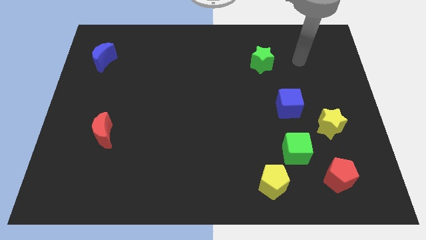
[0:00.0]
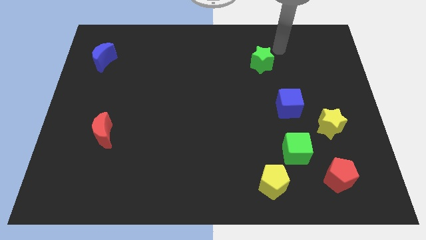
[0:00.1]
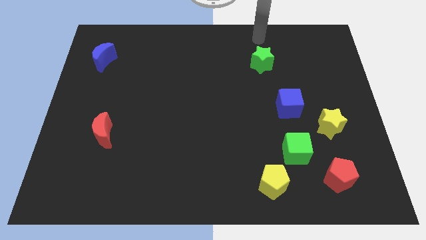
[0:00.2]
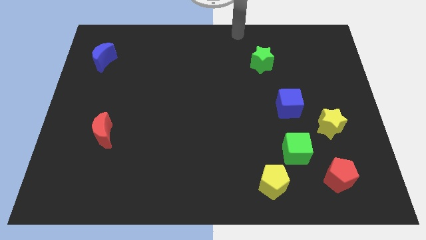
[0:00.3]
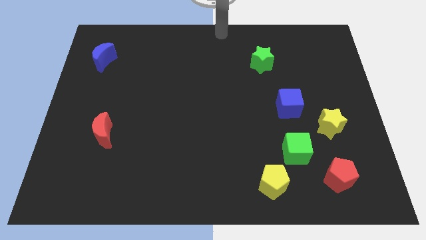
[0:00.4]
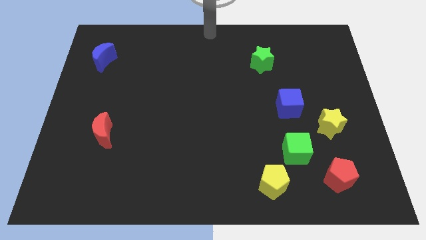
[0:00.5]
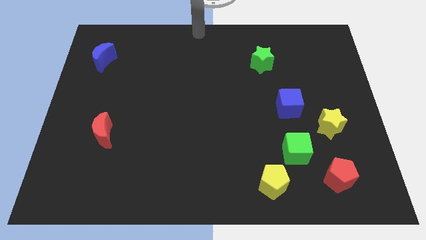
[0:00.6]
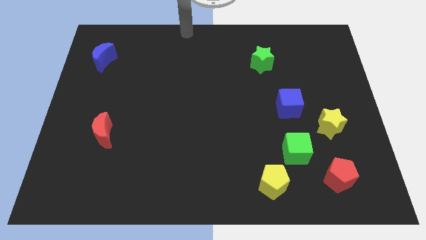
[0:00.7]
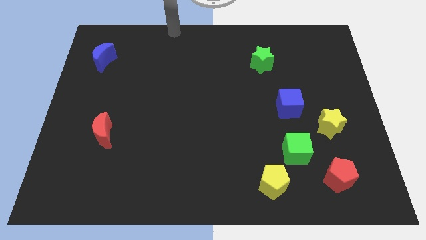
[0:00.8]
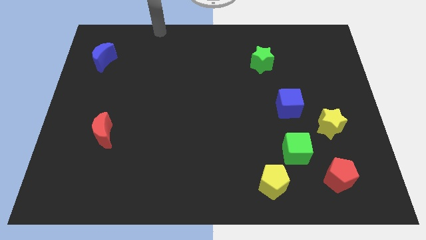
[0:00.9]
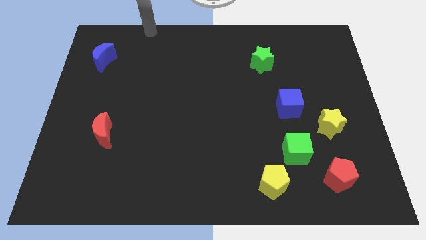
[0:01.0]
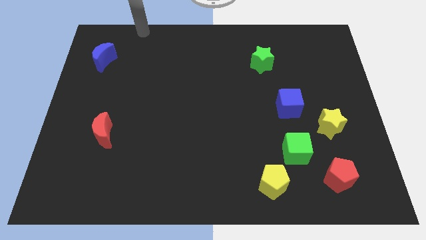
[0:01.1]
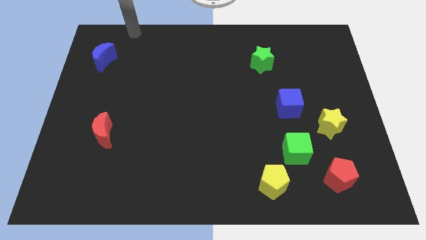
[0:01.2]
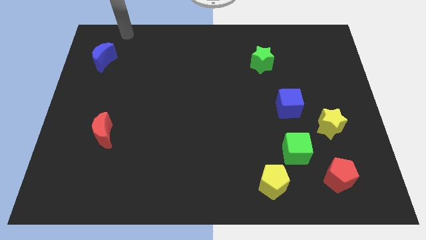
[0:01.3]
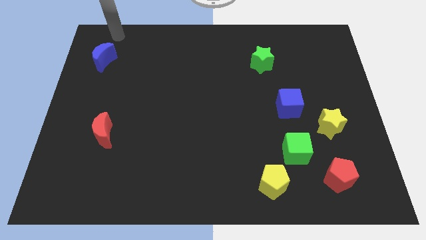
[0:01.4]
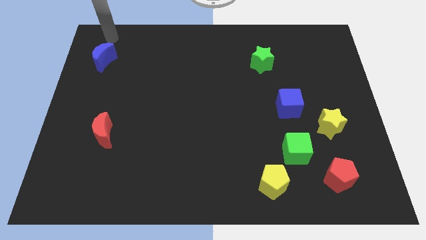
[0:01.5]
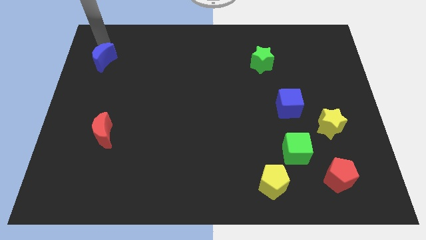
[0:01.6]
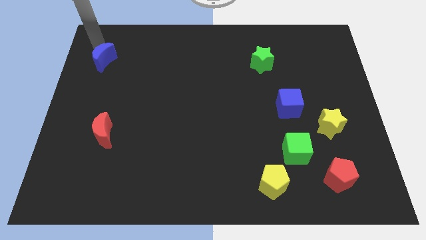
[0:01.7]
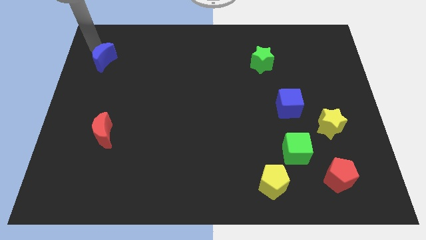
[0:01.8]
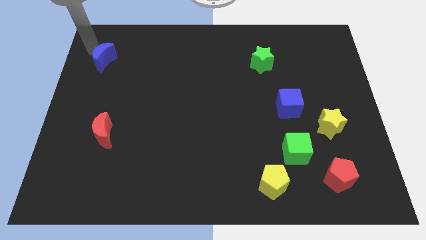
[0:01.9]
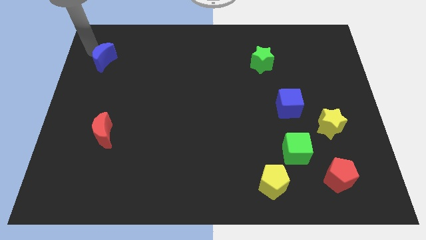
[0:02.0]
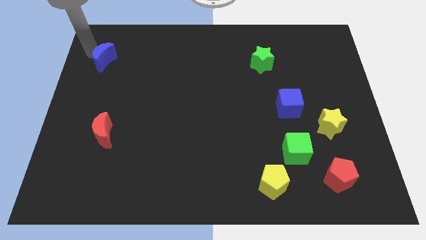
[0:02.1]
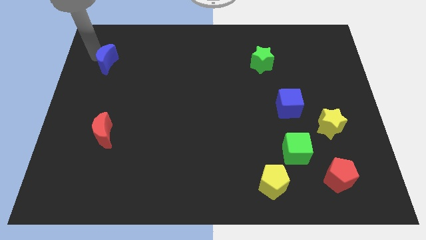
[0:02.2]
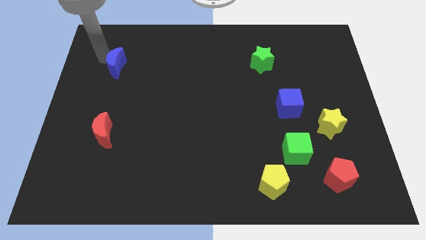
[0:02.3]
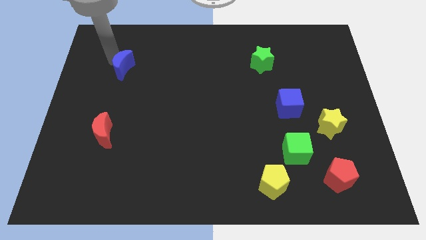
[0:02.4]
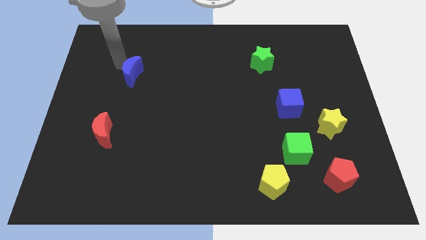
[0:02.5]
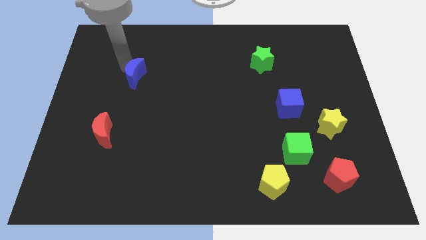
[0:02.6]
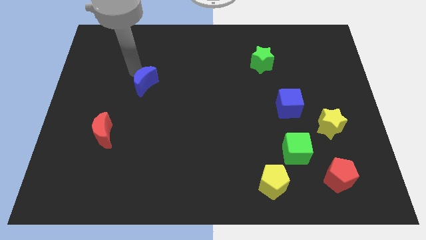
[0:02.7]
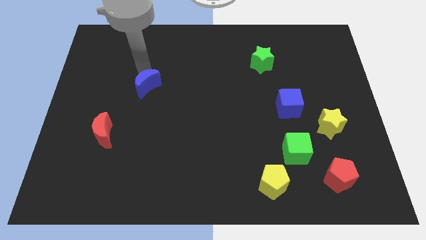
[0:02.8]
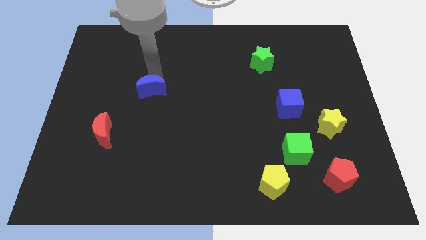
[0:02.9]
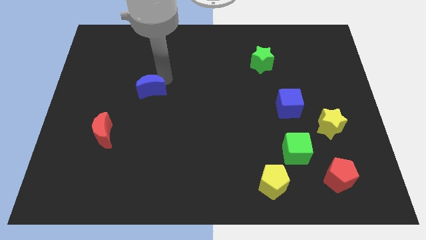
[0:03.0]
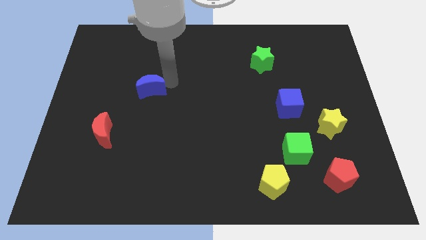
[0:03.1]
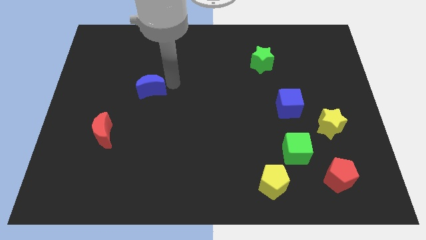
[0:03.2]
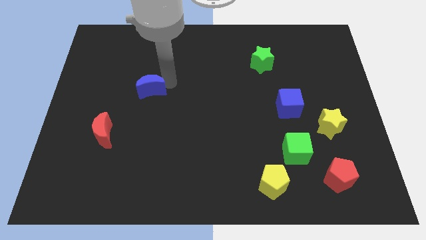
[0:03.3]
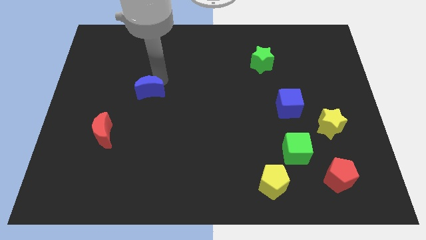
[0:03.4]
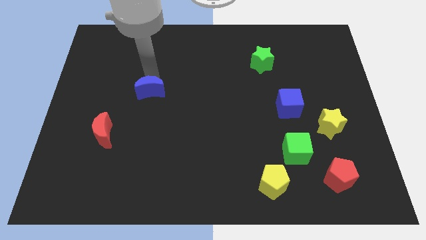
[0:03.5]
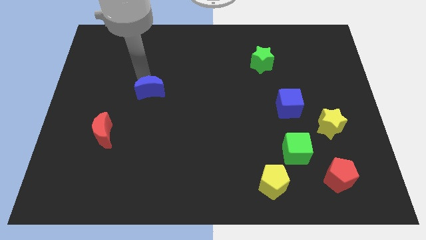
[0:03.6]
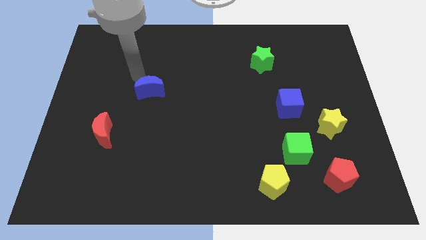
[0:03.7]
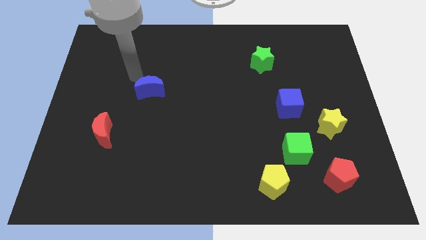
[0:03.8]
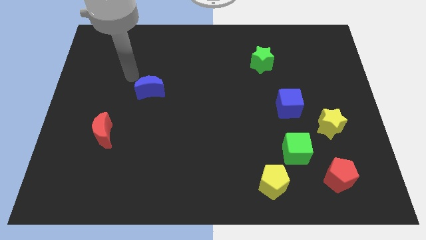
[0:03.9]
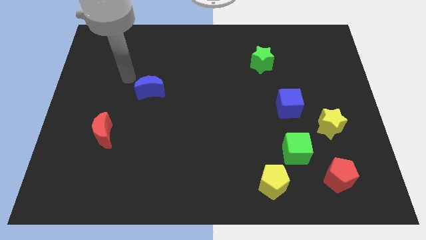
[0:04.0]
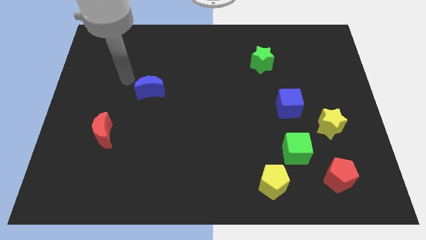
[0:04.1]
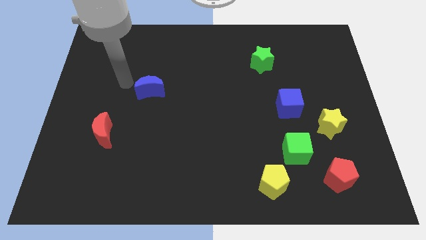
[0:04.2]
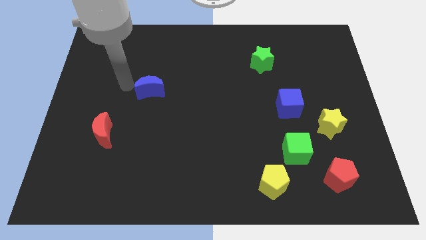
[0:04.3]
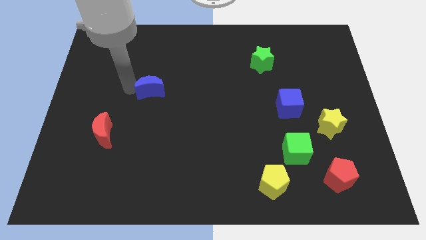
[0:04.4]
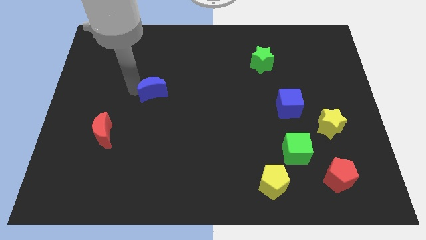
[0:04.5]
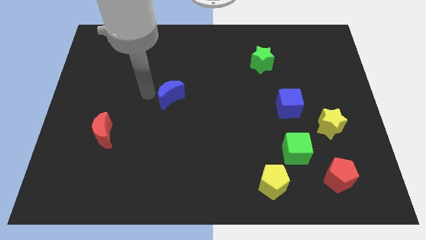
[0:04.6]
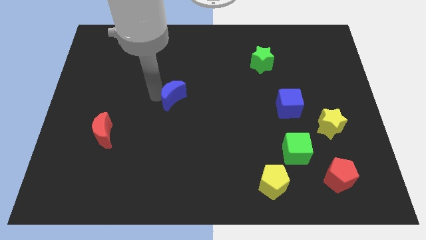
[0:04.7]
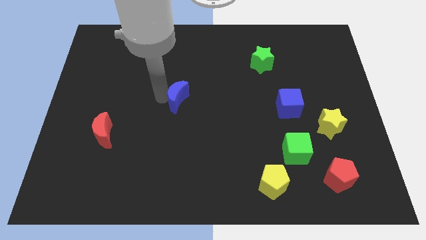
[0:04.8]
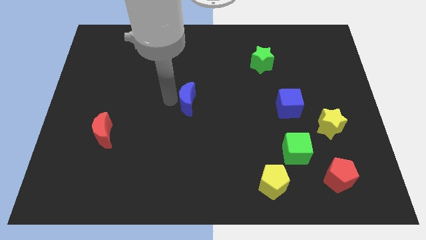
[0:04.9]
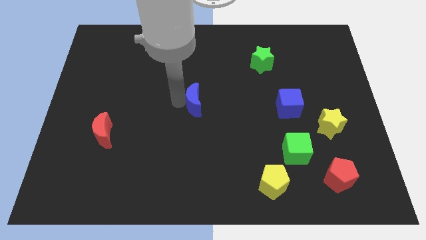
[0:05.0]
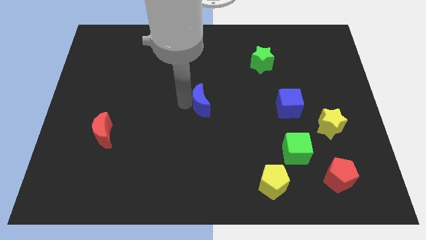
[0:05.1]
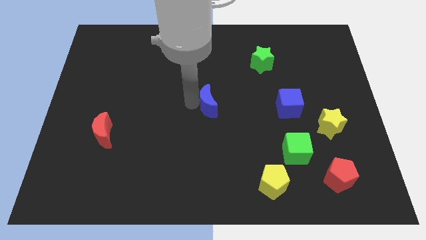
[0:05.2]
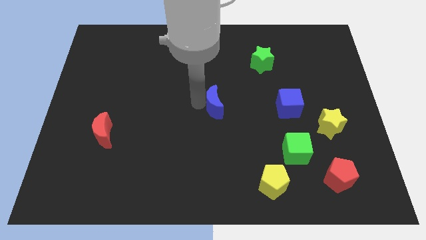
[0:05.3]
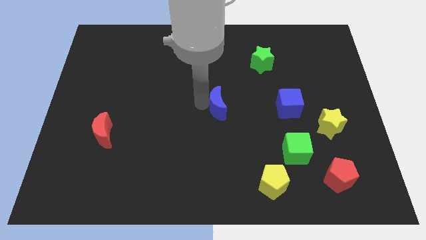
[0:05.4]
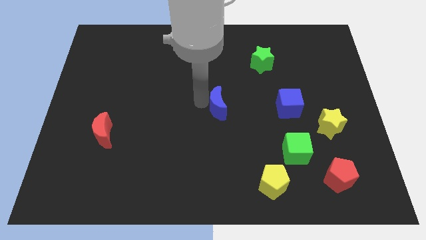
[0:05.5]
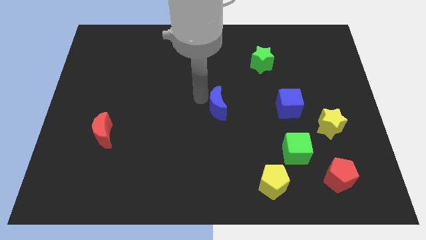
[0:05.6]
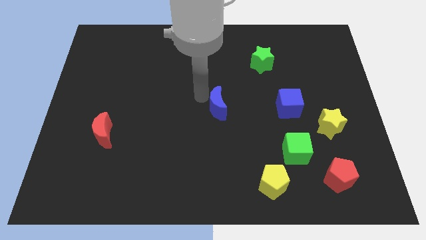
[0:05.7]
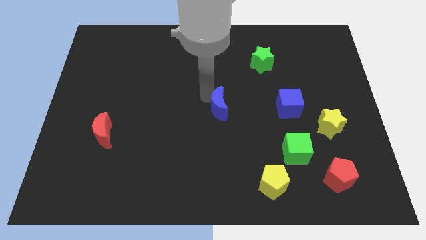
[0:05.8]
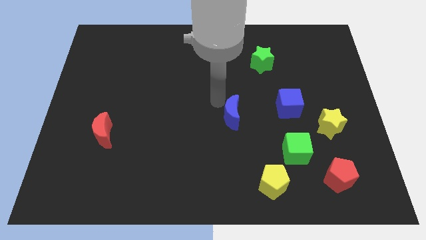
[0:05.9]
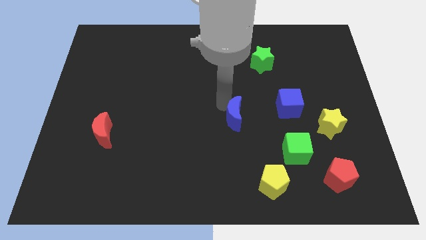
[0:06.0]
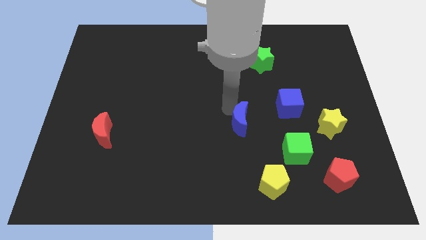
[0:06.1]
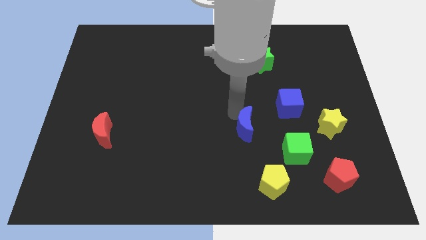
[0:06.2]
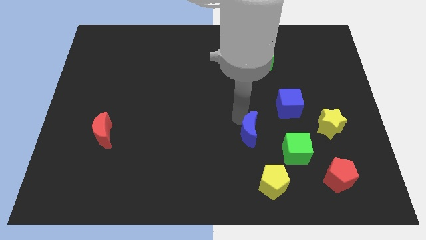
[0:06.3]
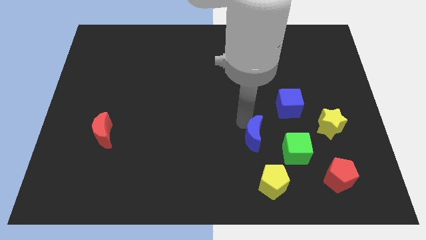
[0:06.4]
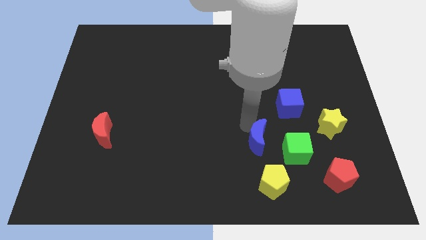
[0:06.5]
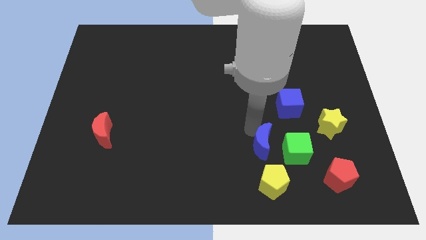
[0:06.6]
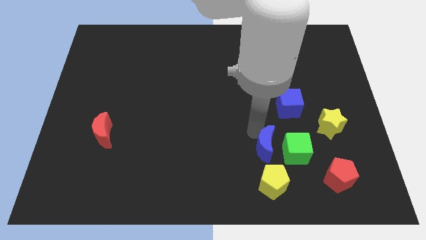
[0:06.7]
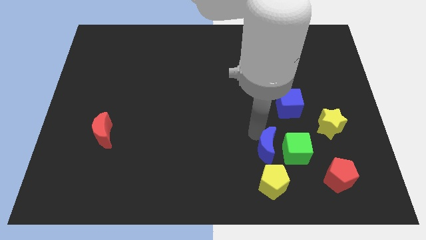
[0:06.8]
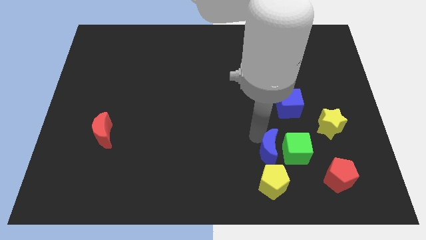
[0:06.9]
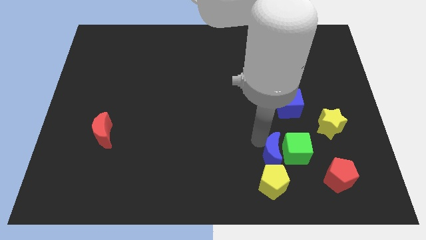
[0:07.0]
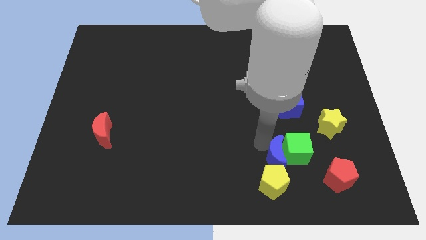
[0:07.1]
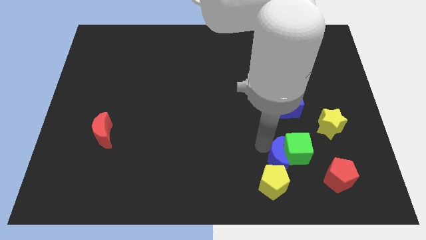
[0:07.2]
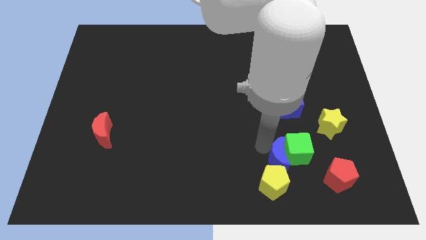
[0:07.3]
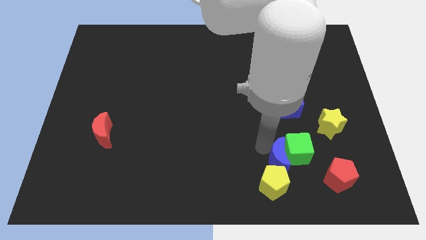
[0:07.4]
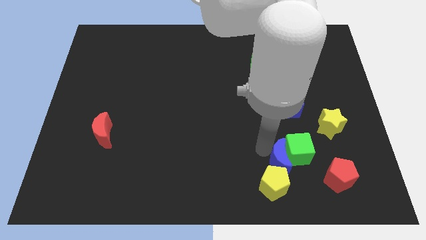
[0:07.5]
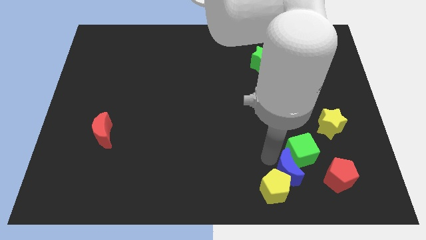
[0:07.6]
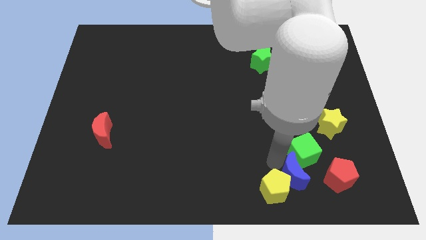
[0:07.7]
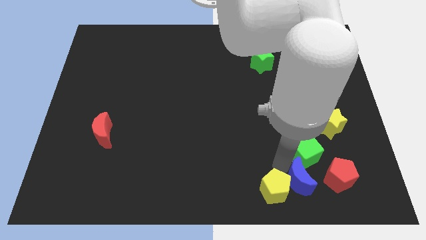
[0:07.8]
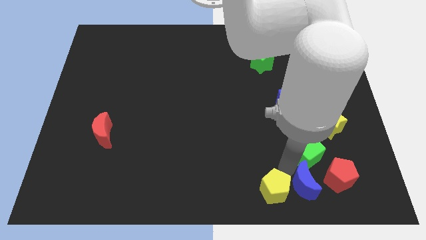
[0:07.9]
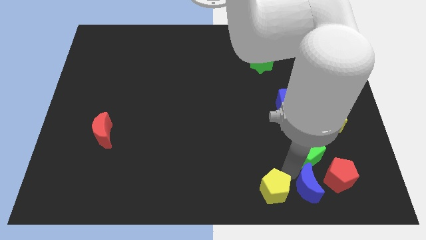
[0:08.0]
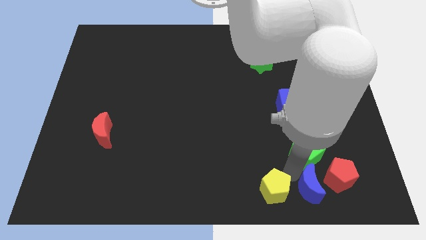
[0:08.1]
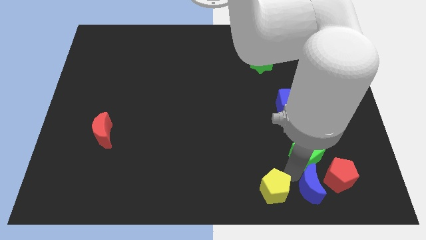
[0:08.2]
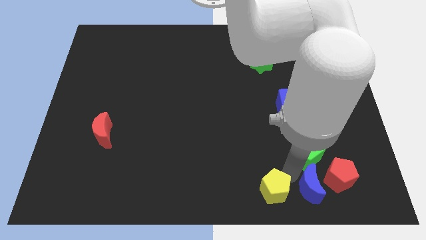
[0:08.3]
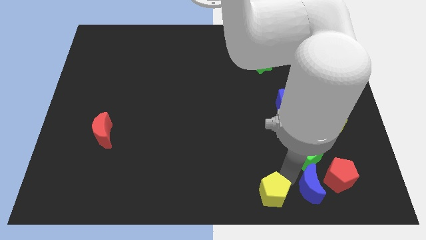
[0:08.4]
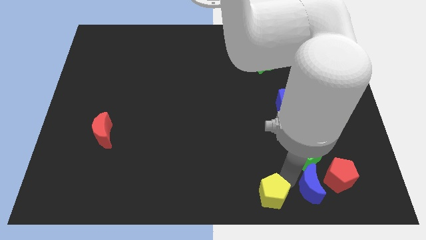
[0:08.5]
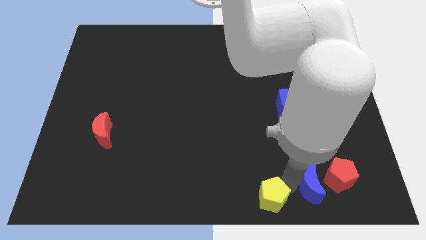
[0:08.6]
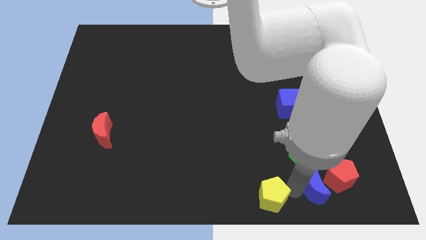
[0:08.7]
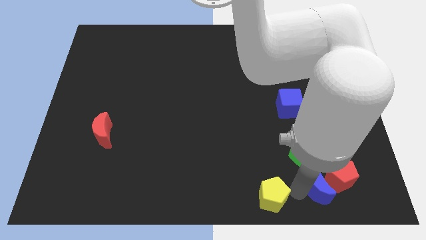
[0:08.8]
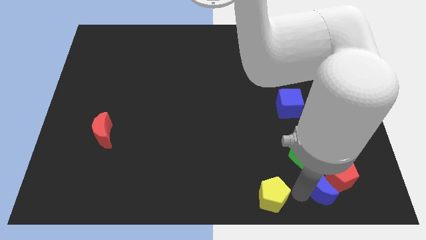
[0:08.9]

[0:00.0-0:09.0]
put the blue moon next to the red pentagon
